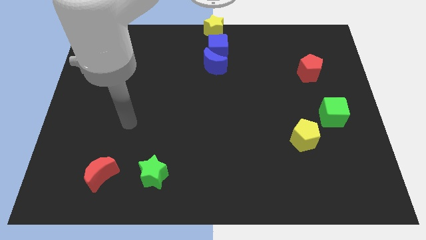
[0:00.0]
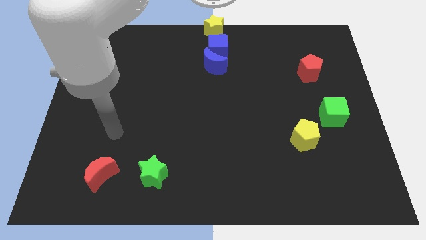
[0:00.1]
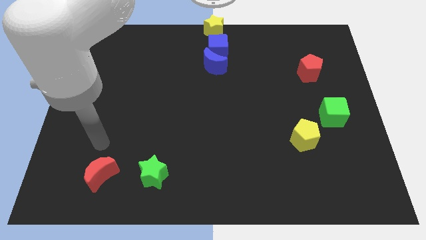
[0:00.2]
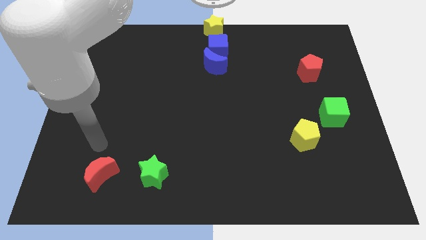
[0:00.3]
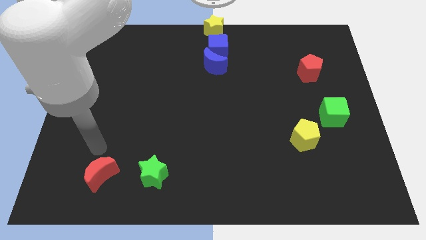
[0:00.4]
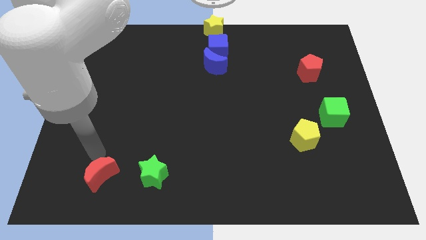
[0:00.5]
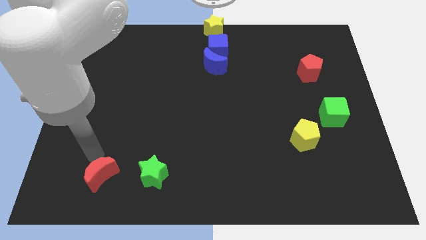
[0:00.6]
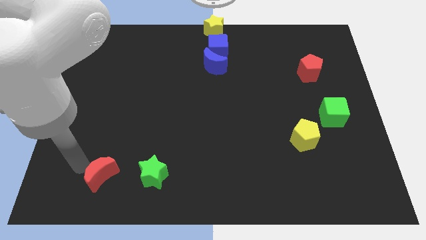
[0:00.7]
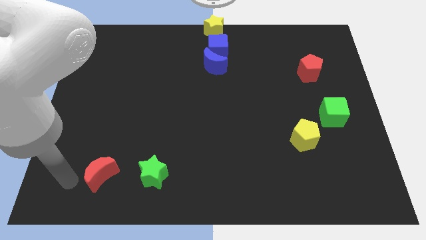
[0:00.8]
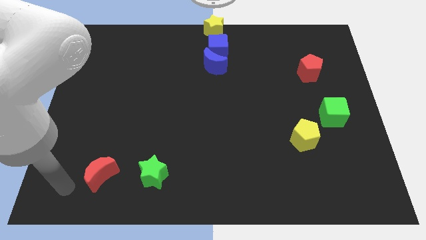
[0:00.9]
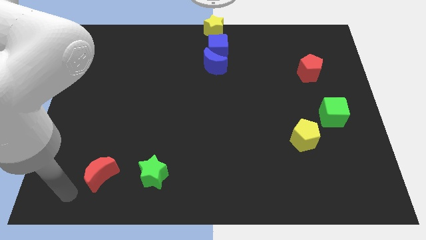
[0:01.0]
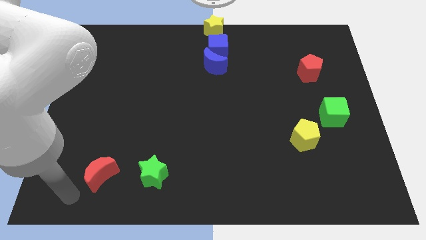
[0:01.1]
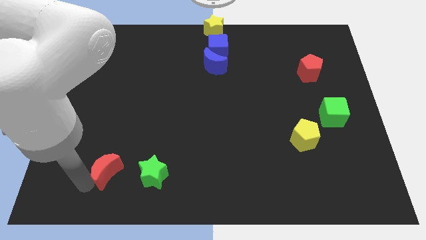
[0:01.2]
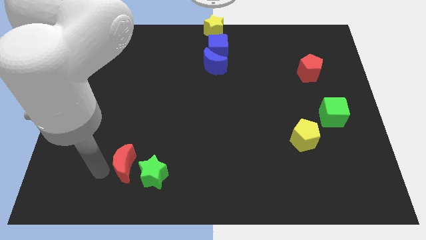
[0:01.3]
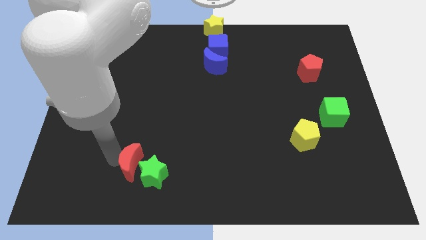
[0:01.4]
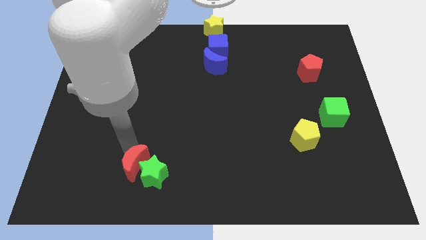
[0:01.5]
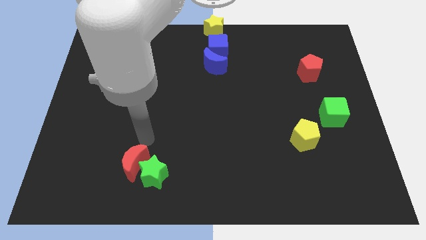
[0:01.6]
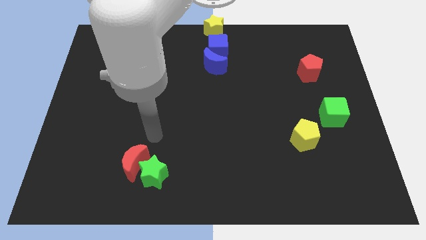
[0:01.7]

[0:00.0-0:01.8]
move the red moon into the green star

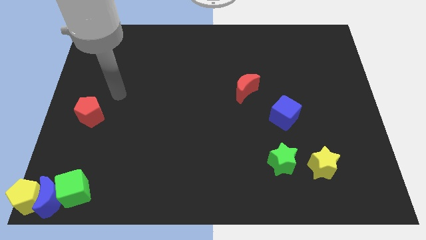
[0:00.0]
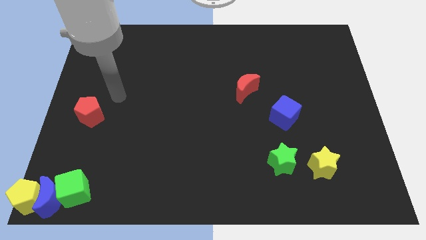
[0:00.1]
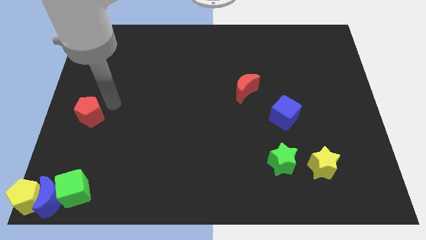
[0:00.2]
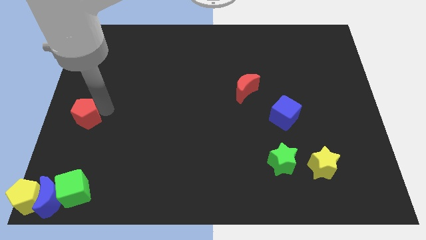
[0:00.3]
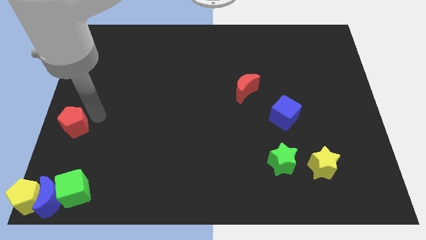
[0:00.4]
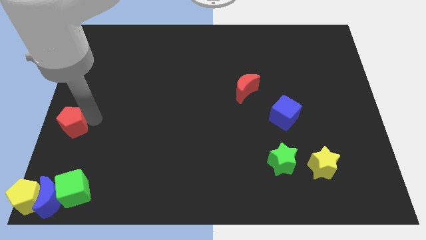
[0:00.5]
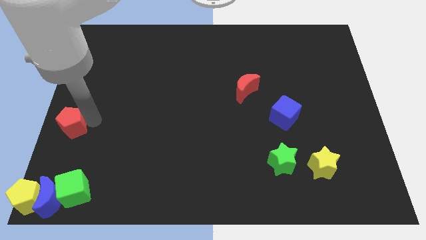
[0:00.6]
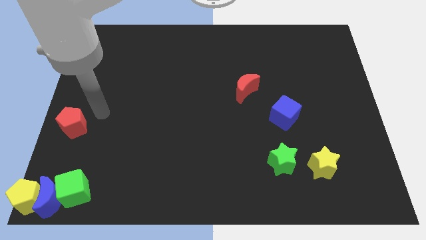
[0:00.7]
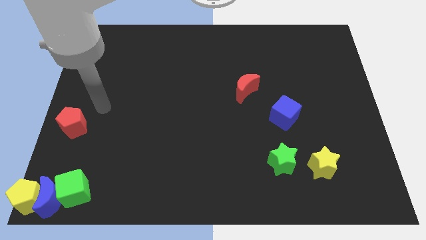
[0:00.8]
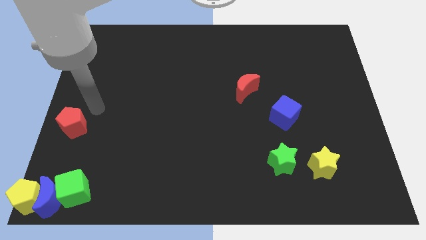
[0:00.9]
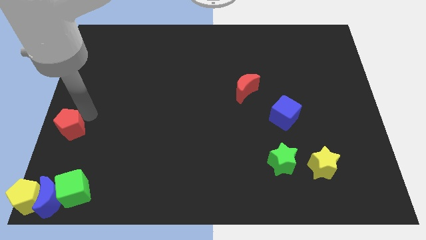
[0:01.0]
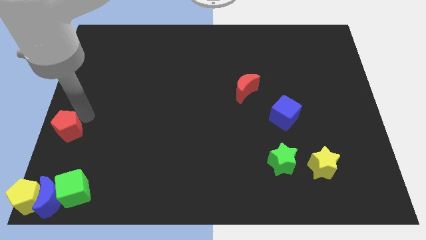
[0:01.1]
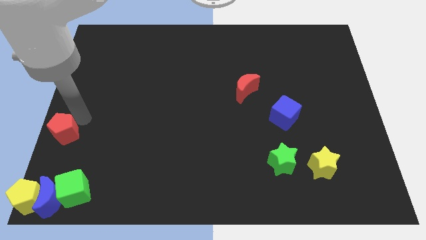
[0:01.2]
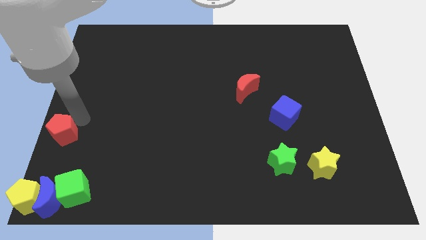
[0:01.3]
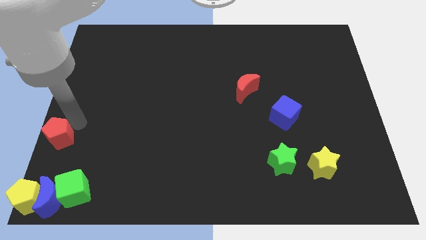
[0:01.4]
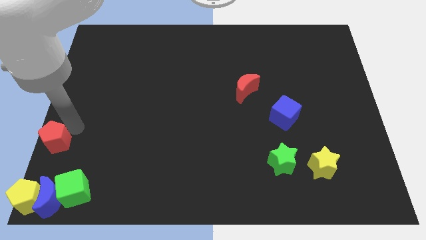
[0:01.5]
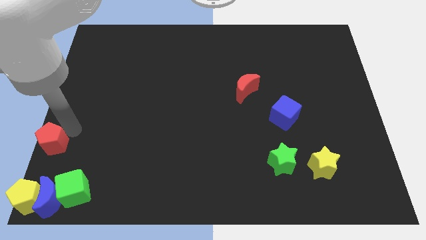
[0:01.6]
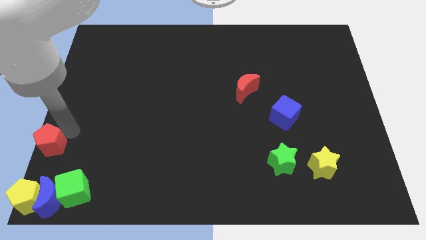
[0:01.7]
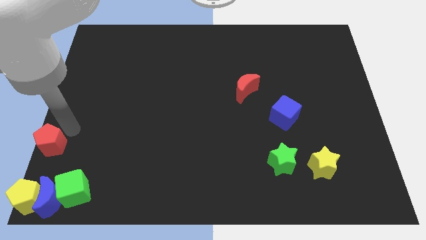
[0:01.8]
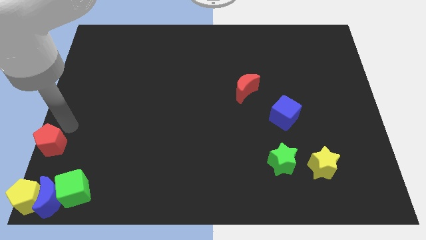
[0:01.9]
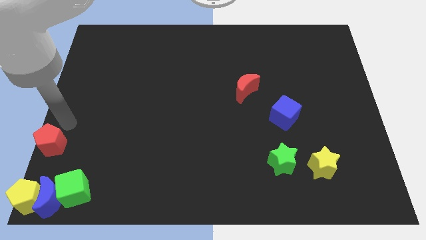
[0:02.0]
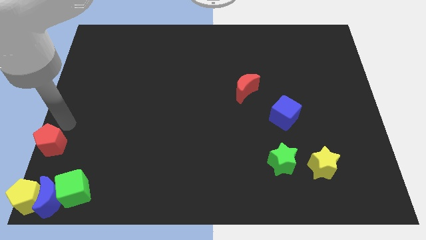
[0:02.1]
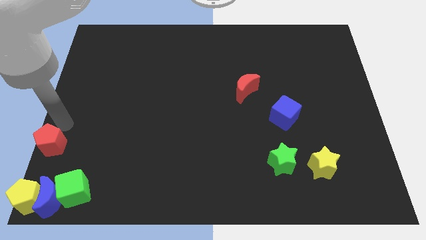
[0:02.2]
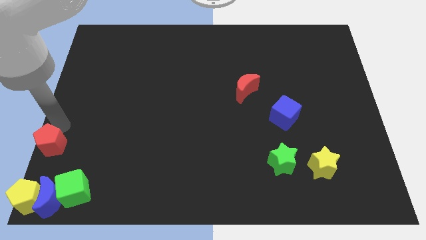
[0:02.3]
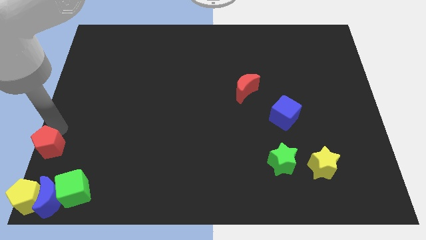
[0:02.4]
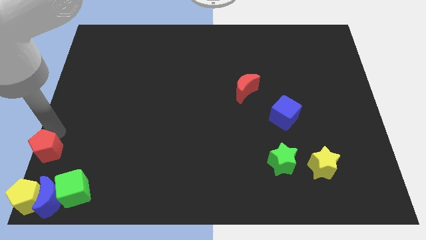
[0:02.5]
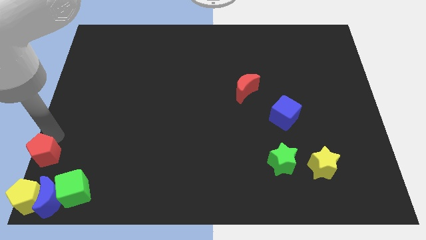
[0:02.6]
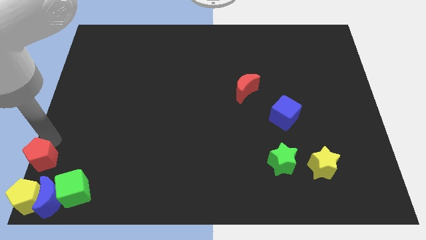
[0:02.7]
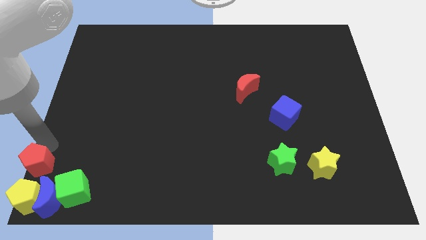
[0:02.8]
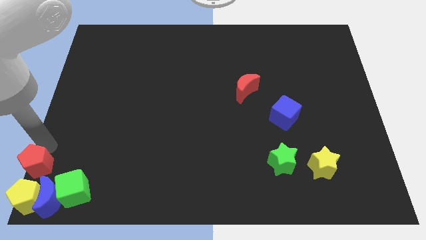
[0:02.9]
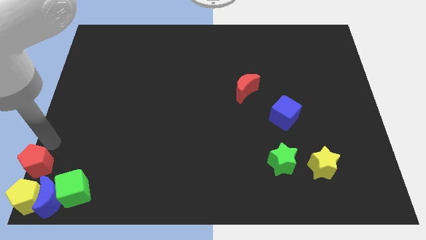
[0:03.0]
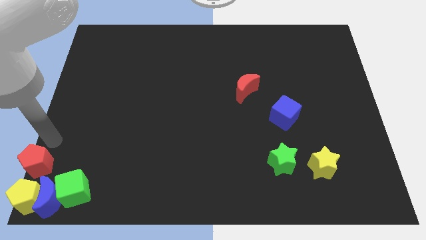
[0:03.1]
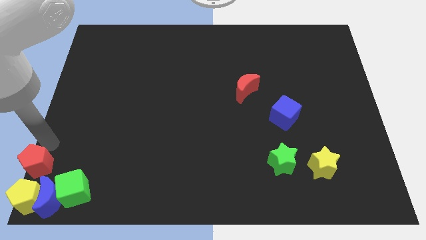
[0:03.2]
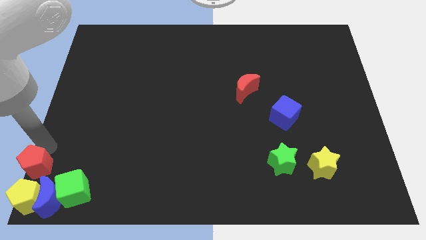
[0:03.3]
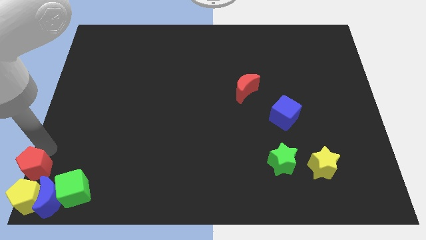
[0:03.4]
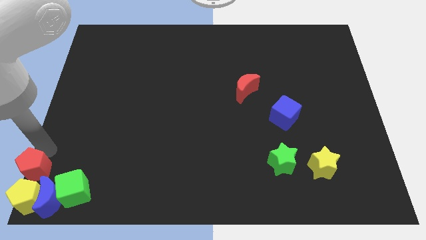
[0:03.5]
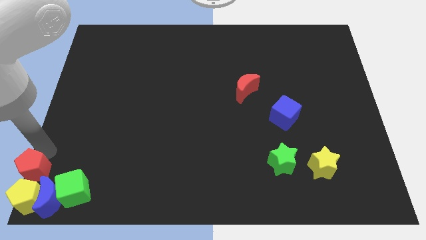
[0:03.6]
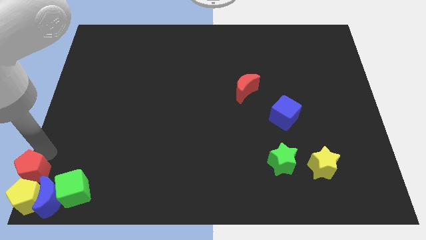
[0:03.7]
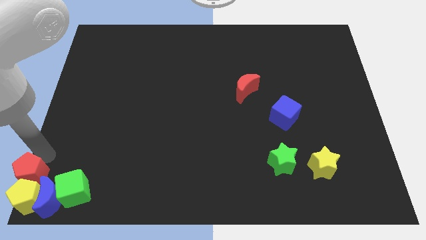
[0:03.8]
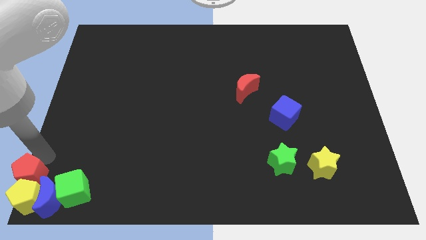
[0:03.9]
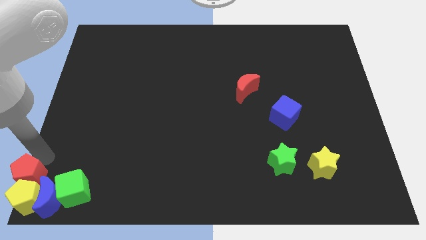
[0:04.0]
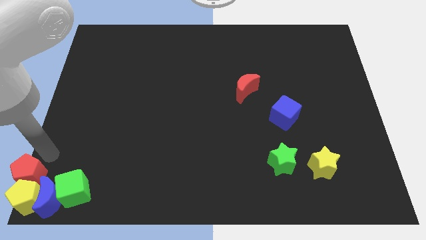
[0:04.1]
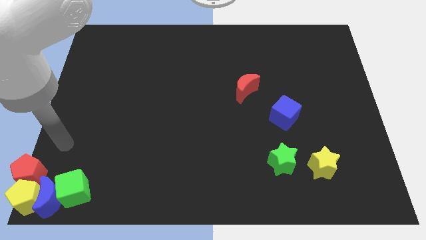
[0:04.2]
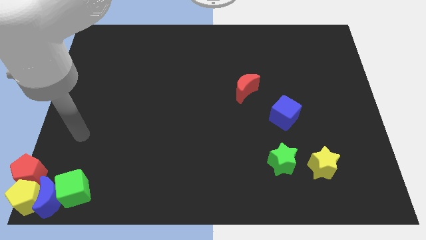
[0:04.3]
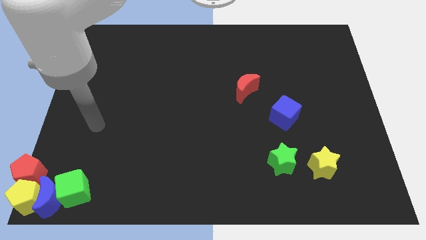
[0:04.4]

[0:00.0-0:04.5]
move red pentagon close to yellow pentagon

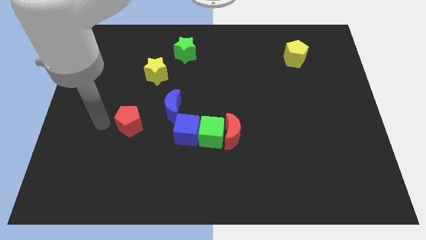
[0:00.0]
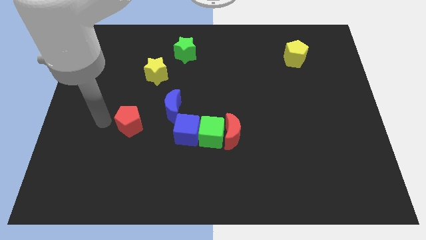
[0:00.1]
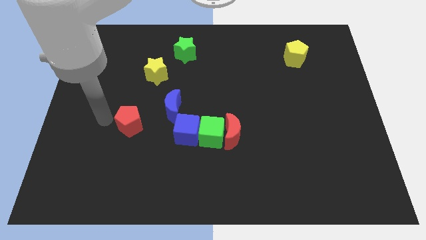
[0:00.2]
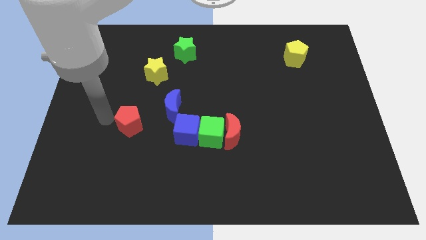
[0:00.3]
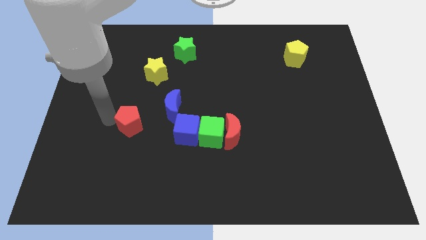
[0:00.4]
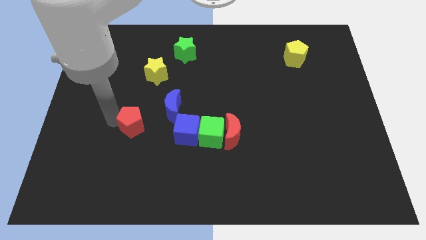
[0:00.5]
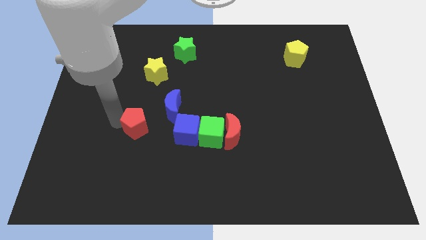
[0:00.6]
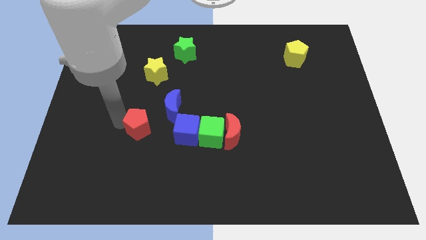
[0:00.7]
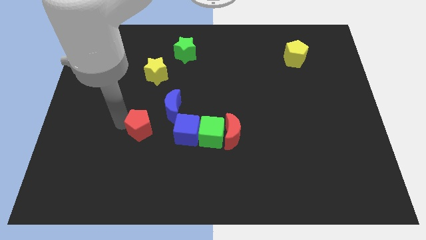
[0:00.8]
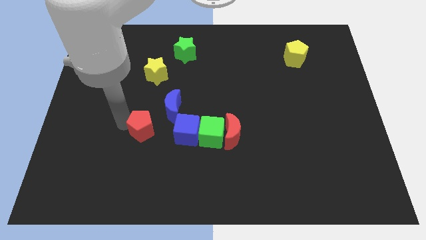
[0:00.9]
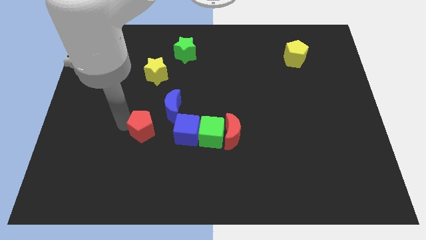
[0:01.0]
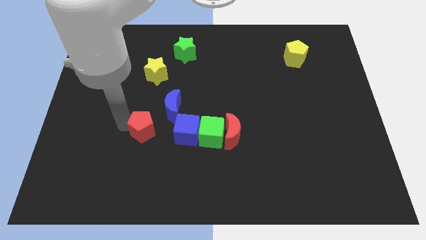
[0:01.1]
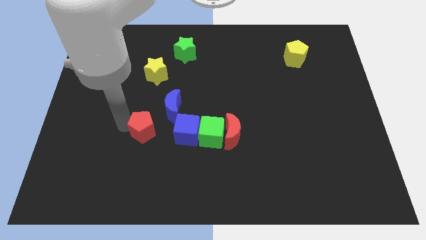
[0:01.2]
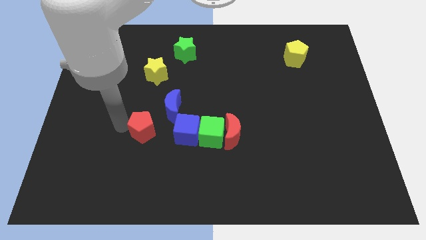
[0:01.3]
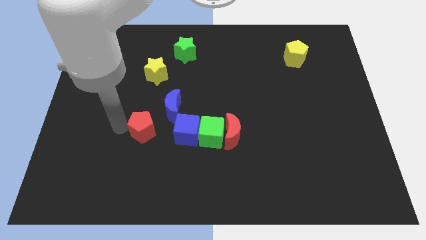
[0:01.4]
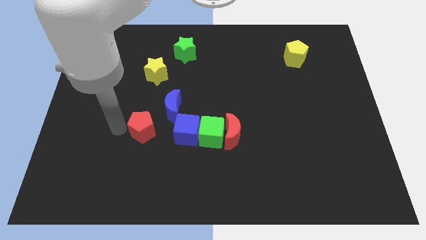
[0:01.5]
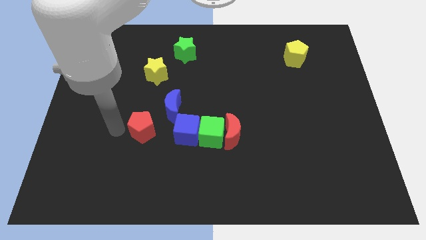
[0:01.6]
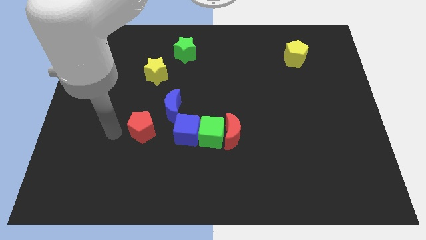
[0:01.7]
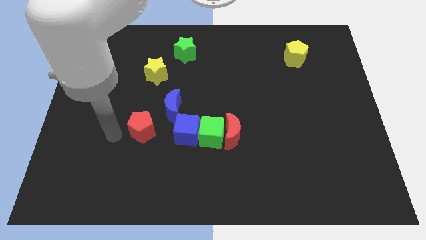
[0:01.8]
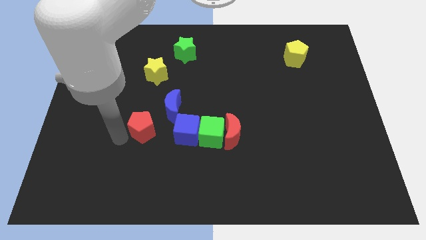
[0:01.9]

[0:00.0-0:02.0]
slide the red pentagon slightly to the right

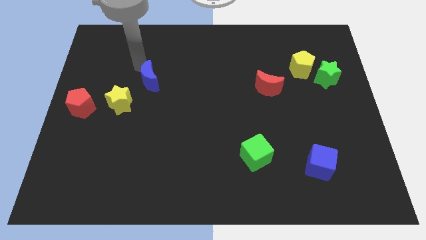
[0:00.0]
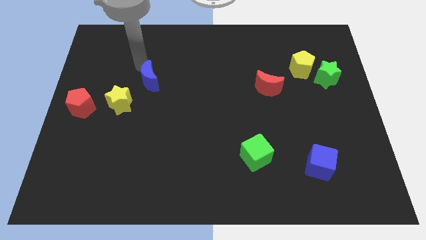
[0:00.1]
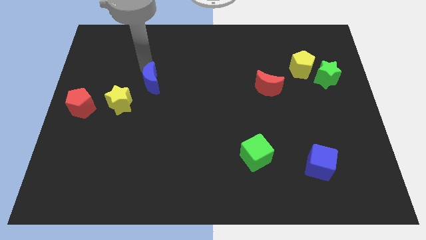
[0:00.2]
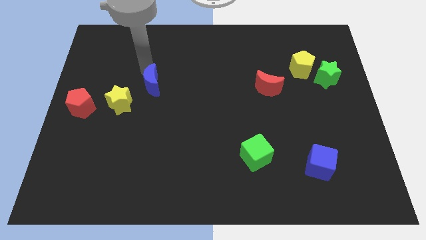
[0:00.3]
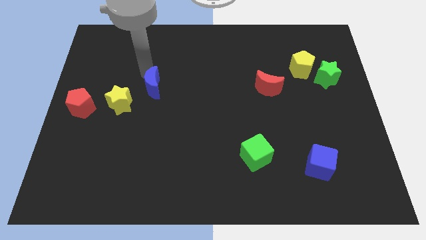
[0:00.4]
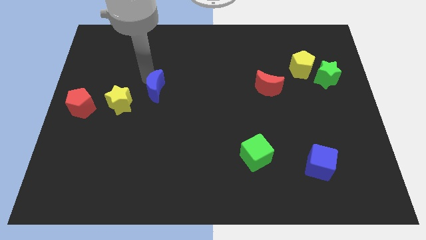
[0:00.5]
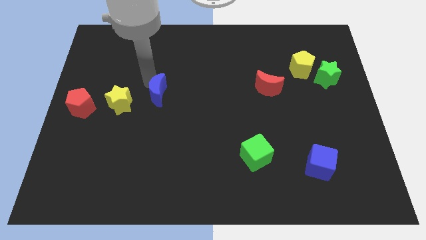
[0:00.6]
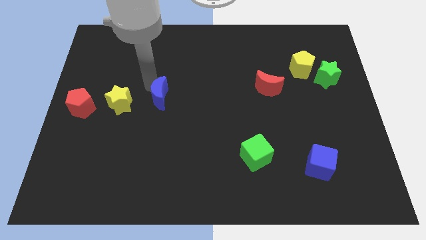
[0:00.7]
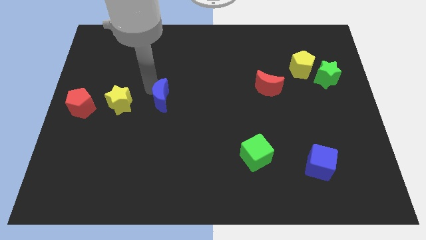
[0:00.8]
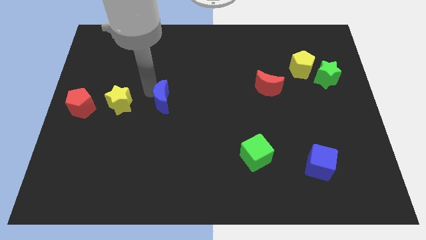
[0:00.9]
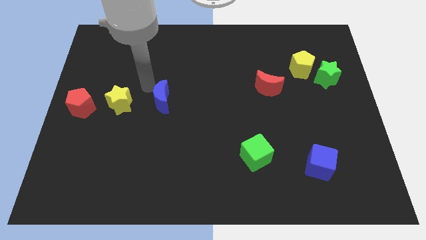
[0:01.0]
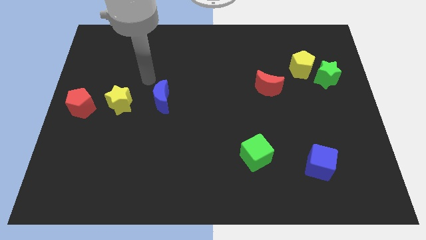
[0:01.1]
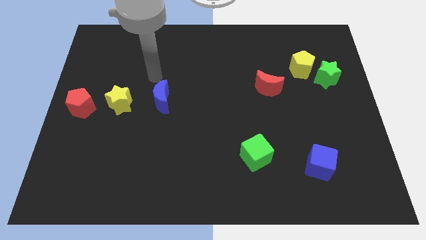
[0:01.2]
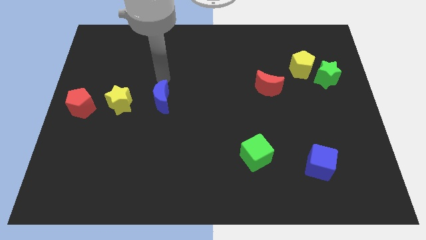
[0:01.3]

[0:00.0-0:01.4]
push the blue moon towards the bottom side of the board
